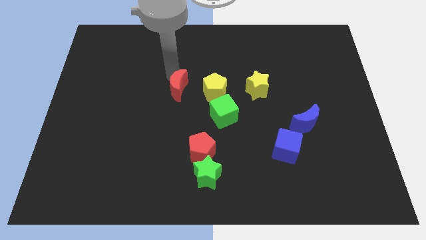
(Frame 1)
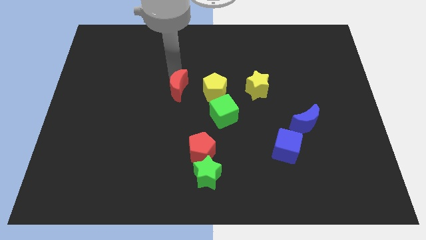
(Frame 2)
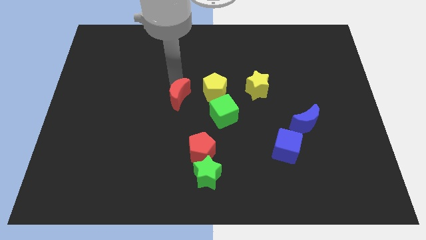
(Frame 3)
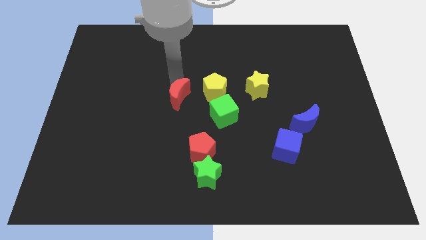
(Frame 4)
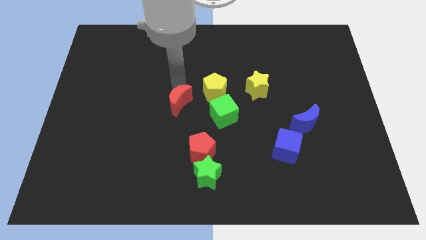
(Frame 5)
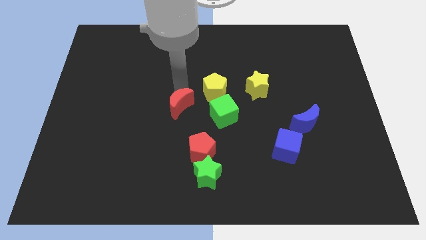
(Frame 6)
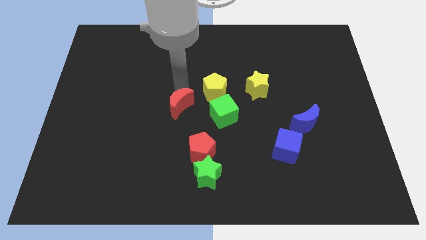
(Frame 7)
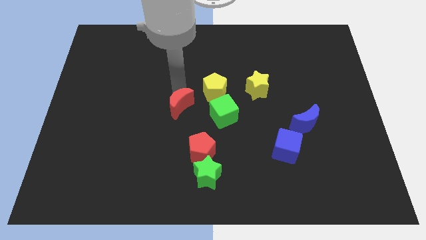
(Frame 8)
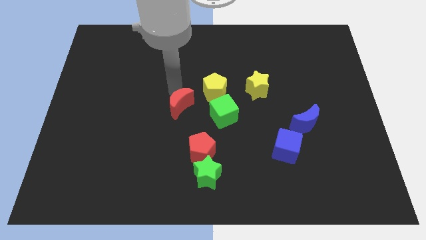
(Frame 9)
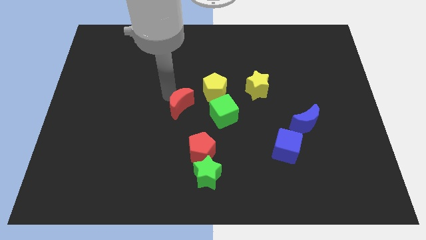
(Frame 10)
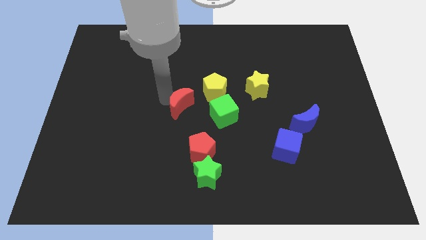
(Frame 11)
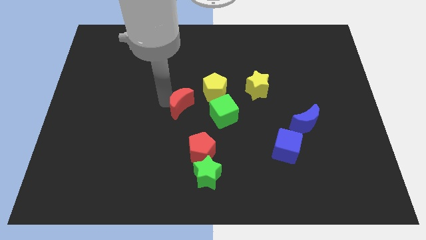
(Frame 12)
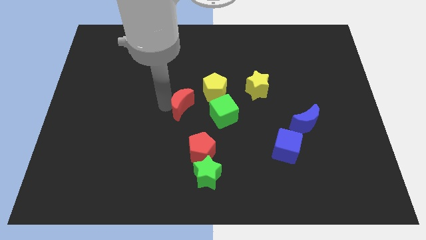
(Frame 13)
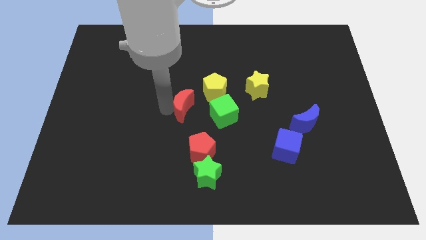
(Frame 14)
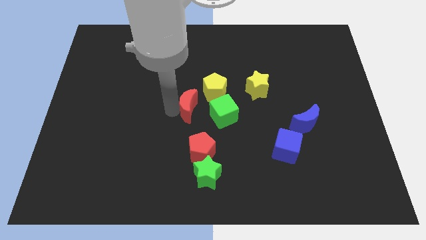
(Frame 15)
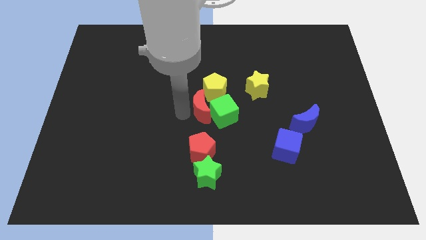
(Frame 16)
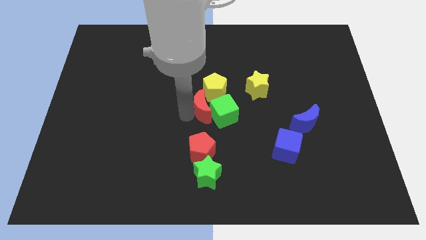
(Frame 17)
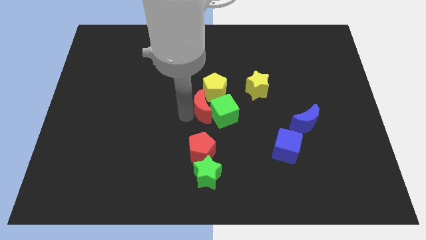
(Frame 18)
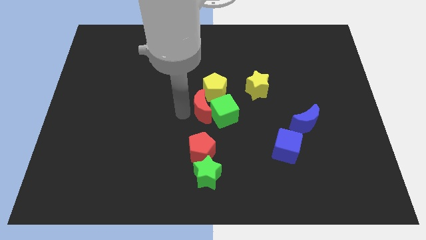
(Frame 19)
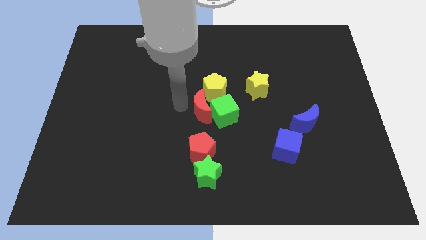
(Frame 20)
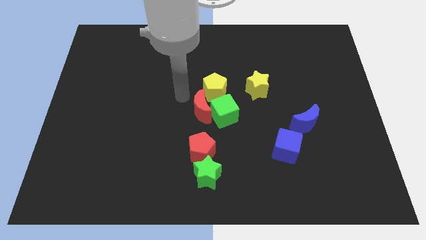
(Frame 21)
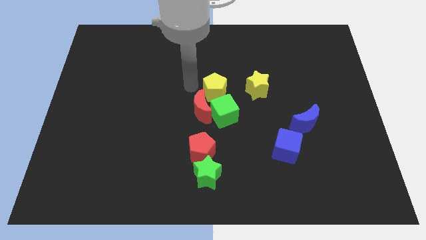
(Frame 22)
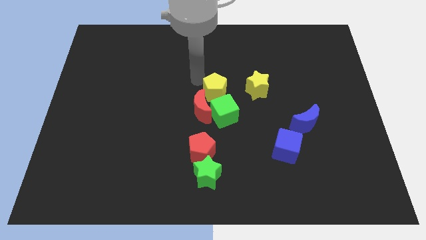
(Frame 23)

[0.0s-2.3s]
put the red moon close to the left side of the green cube

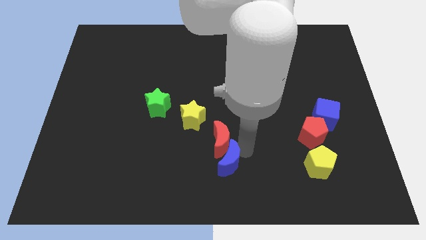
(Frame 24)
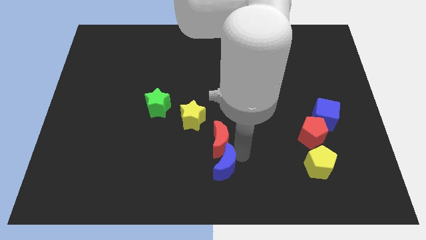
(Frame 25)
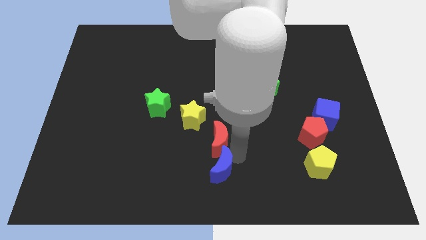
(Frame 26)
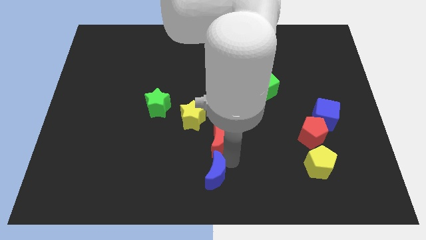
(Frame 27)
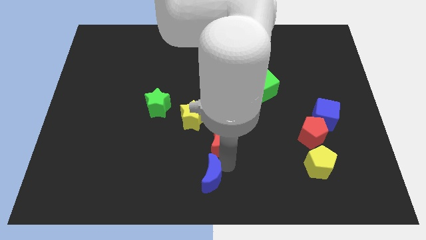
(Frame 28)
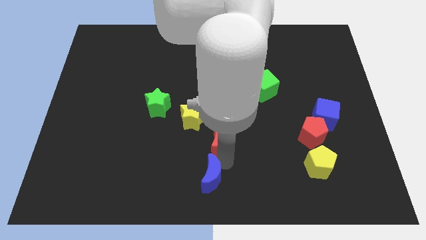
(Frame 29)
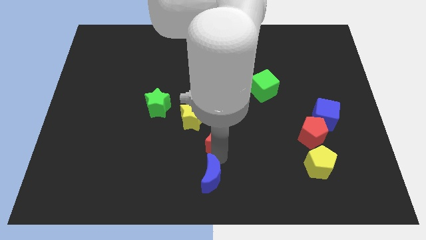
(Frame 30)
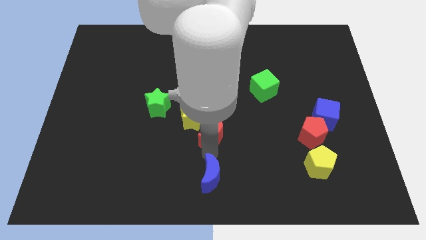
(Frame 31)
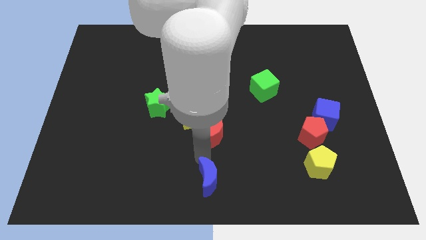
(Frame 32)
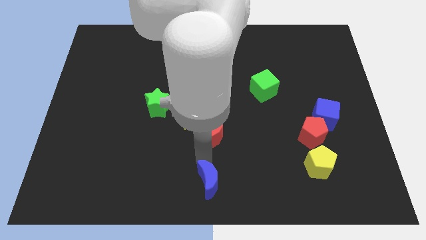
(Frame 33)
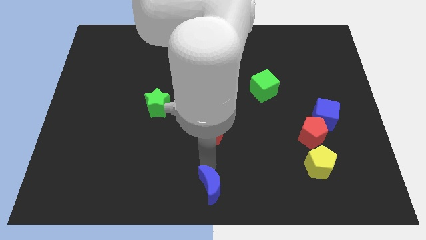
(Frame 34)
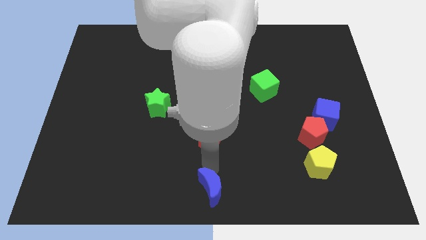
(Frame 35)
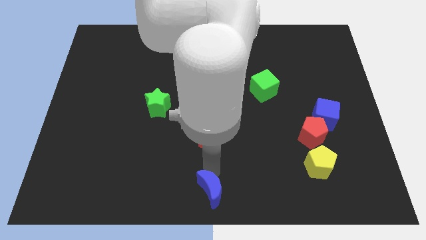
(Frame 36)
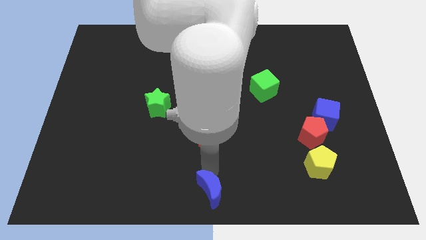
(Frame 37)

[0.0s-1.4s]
separate the blue moon from the red moon

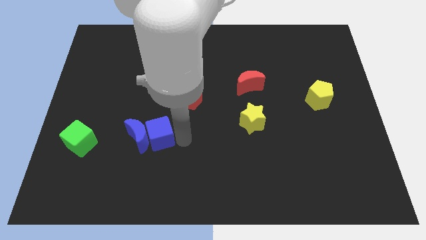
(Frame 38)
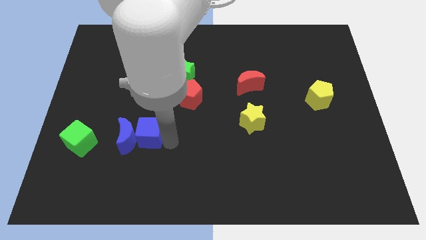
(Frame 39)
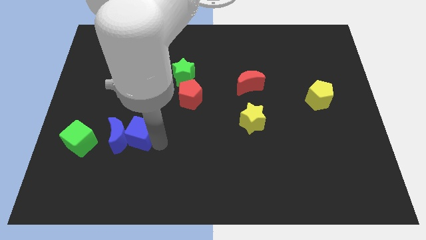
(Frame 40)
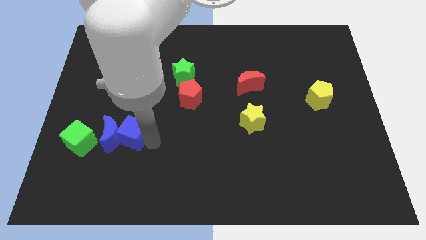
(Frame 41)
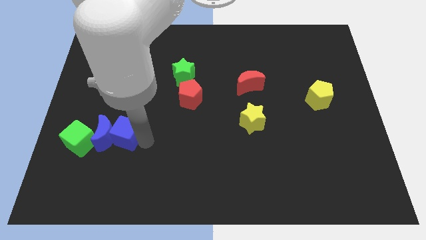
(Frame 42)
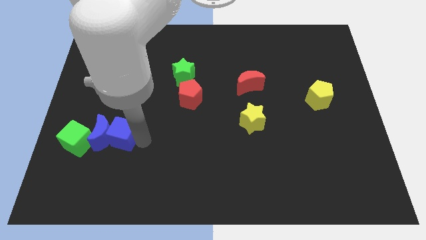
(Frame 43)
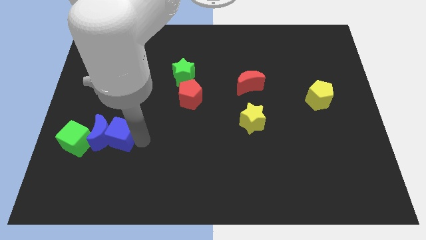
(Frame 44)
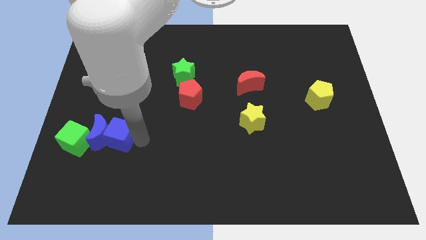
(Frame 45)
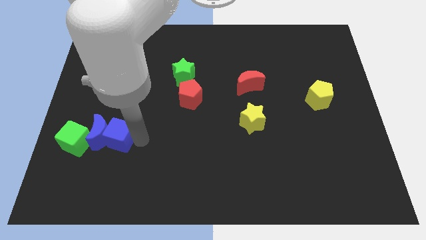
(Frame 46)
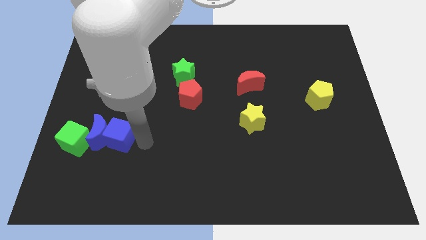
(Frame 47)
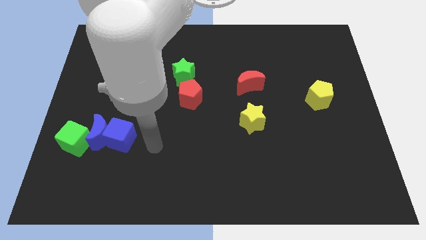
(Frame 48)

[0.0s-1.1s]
push the blue cube and blue crescent into the green cube

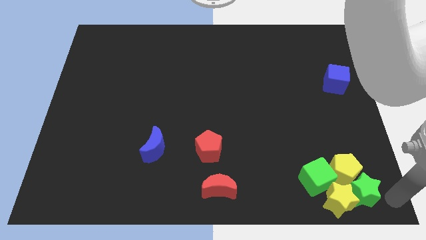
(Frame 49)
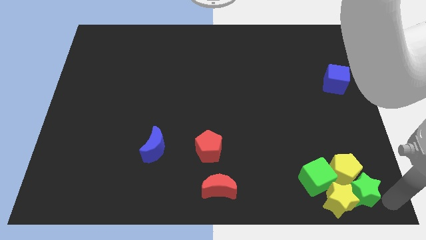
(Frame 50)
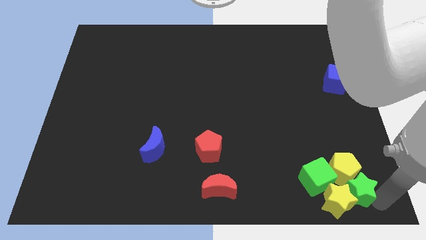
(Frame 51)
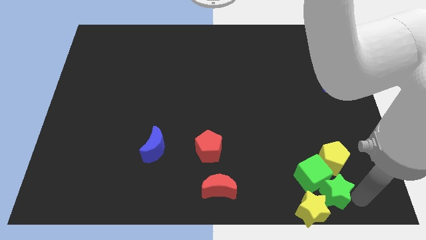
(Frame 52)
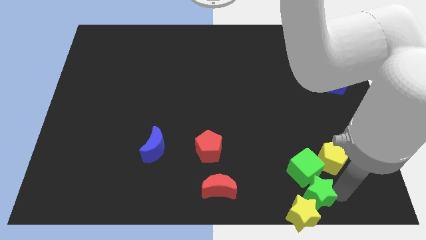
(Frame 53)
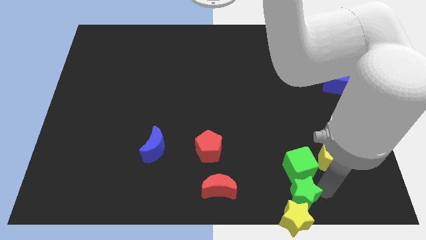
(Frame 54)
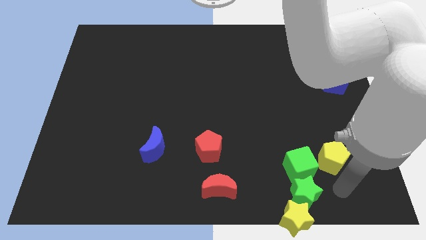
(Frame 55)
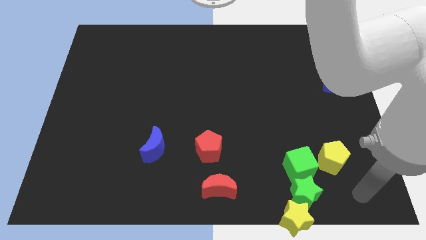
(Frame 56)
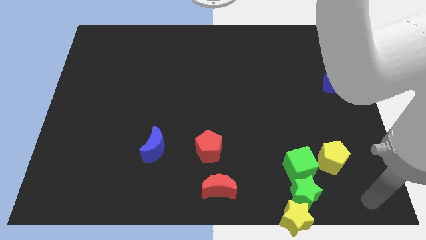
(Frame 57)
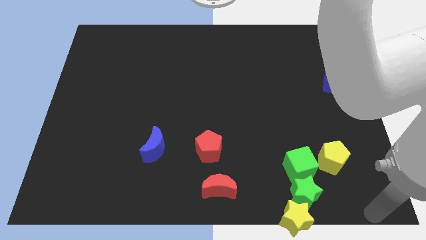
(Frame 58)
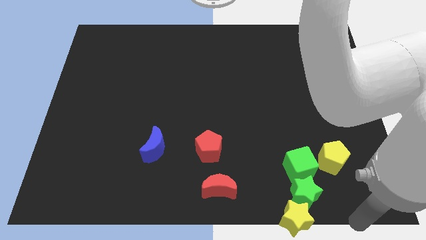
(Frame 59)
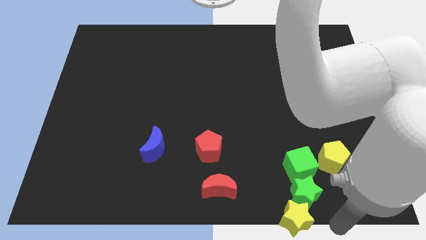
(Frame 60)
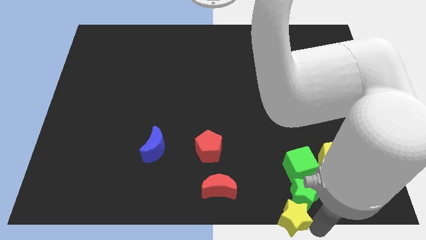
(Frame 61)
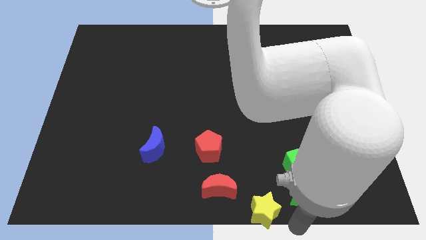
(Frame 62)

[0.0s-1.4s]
push the group of blocks towards the left

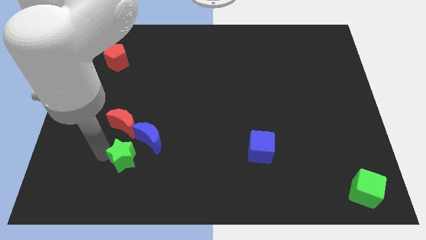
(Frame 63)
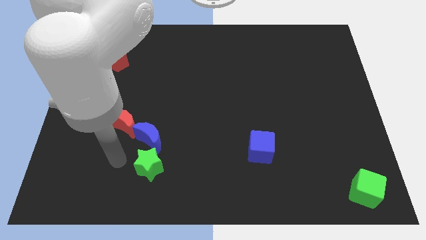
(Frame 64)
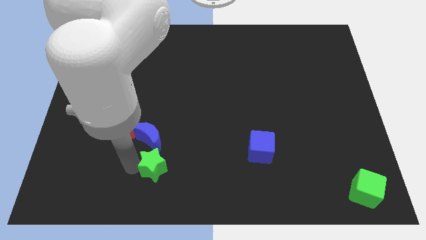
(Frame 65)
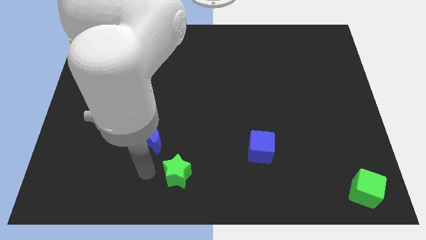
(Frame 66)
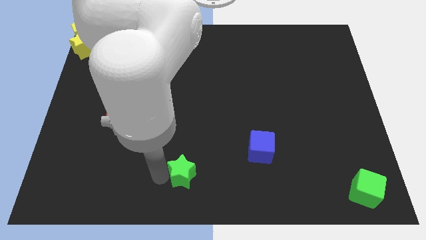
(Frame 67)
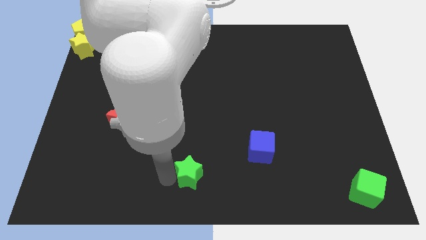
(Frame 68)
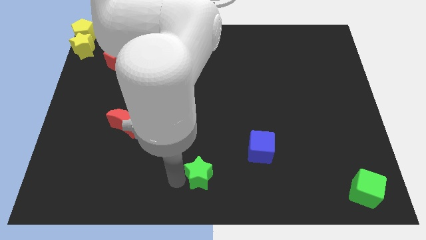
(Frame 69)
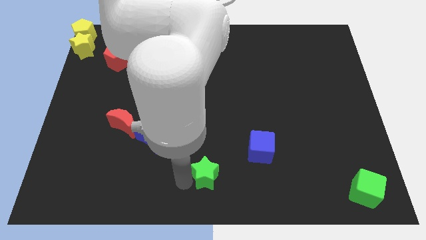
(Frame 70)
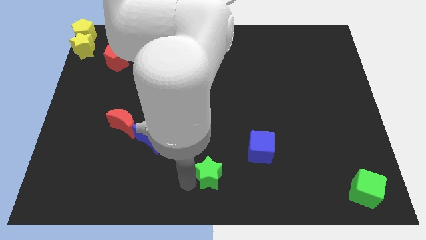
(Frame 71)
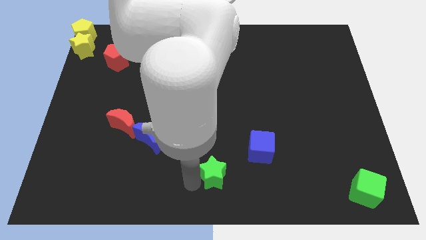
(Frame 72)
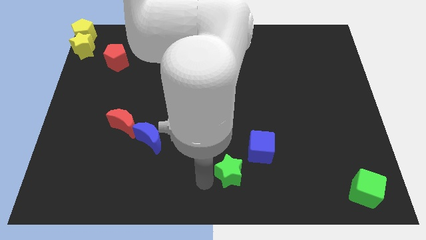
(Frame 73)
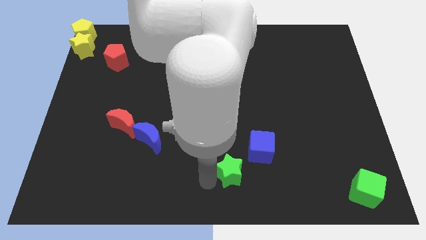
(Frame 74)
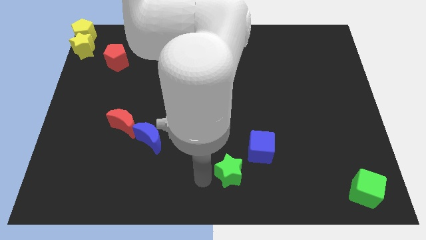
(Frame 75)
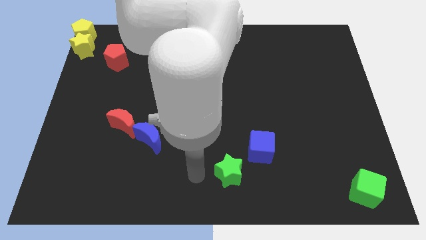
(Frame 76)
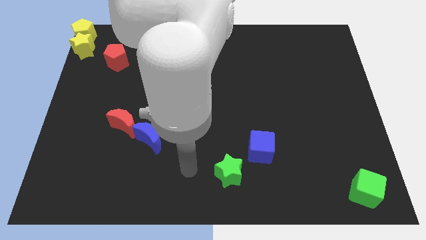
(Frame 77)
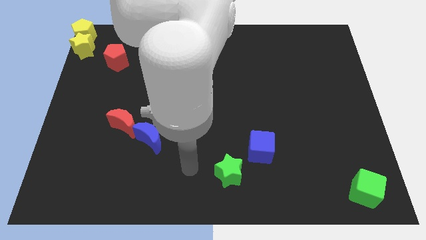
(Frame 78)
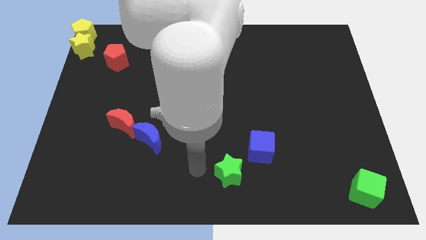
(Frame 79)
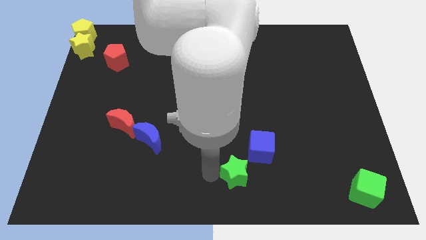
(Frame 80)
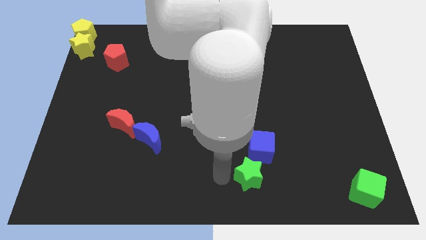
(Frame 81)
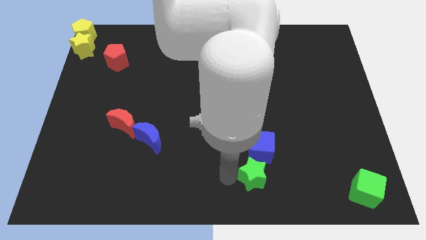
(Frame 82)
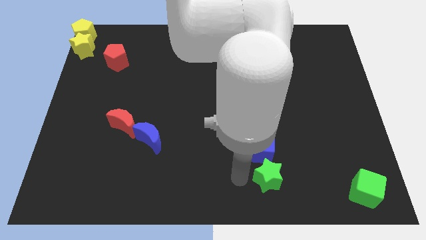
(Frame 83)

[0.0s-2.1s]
place the green star underneath the blue cube

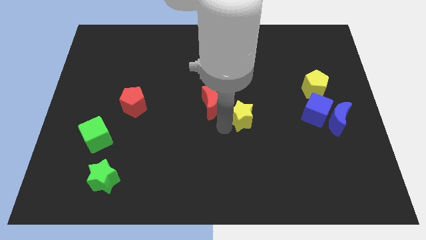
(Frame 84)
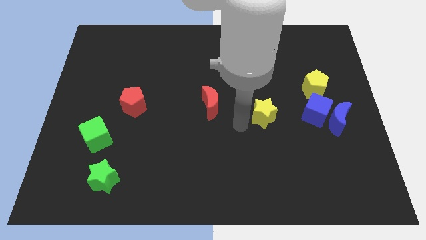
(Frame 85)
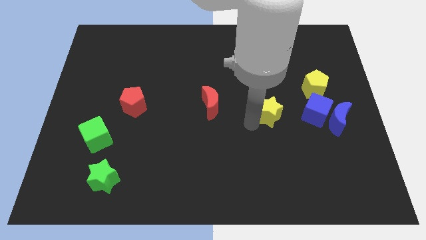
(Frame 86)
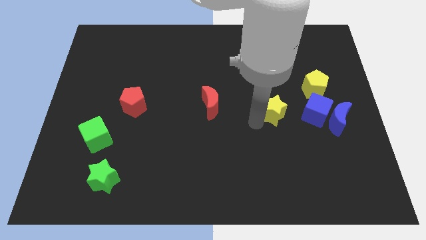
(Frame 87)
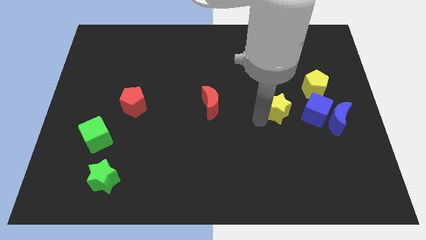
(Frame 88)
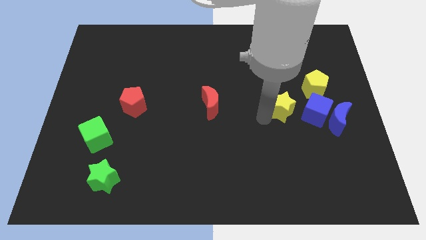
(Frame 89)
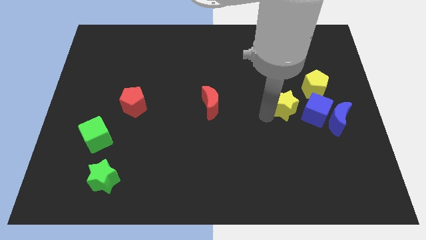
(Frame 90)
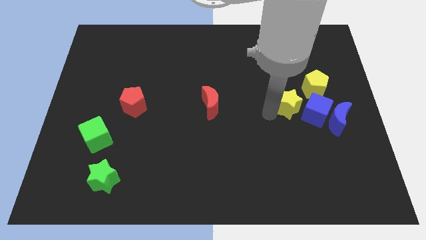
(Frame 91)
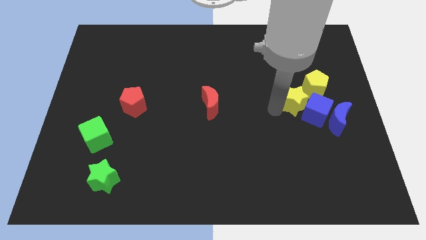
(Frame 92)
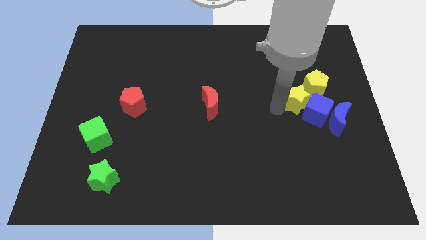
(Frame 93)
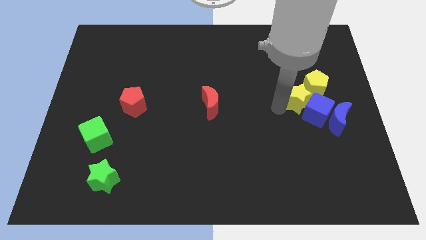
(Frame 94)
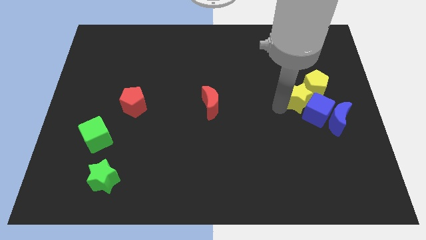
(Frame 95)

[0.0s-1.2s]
push the yellow star to the left bottom of the yellow yellow pentagon
